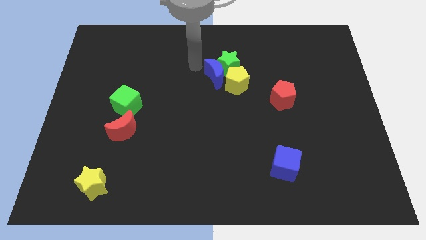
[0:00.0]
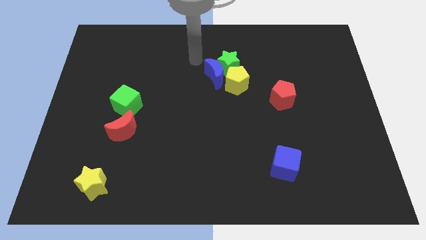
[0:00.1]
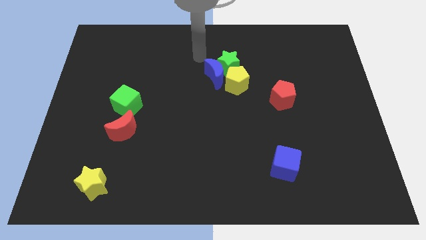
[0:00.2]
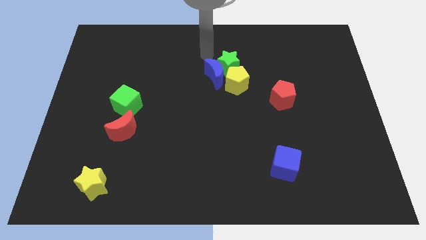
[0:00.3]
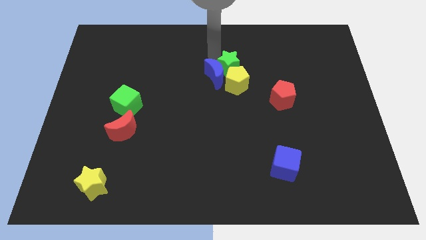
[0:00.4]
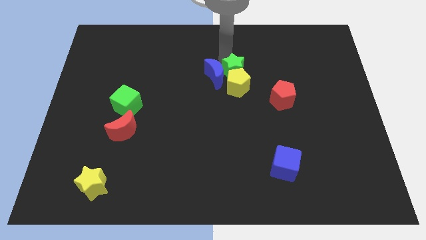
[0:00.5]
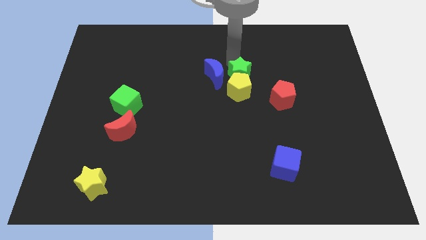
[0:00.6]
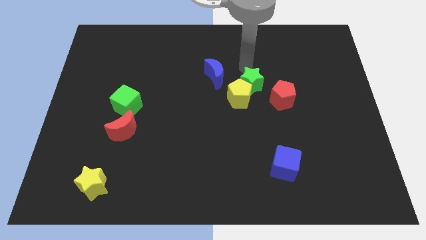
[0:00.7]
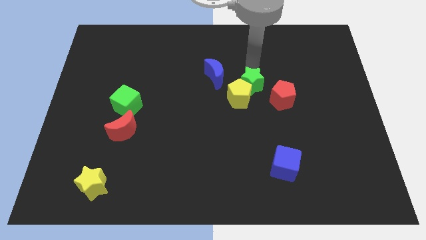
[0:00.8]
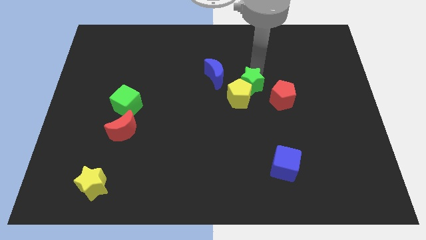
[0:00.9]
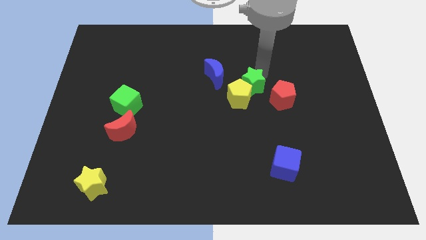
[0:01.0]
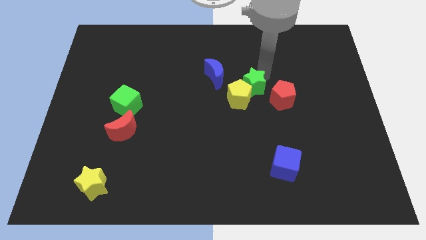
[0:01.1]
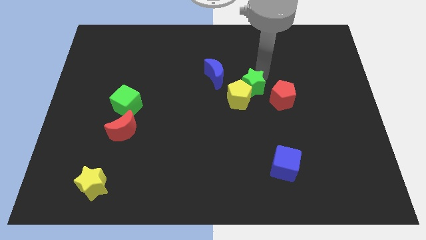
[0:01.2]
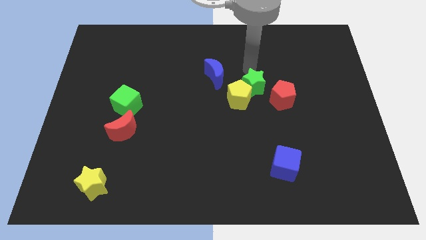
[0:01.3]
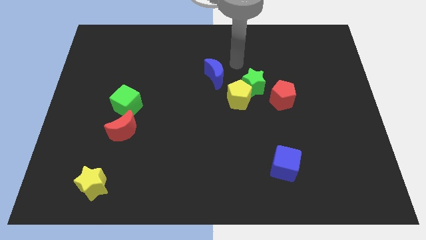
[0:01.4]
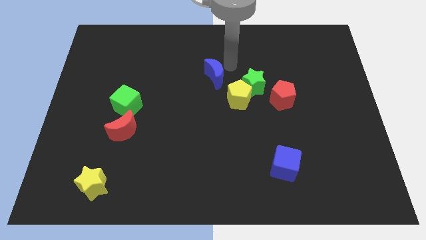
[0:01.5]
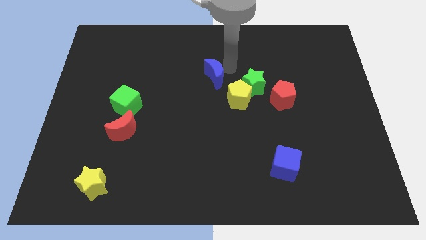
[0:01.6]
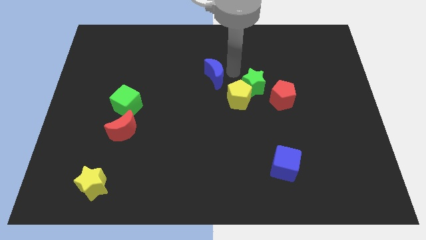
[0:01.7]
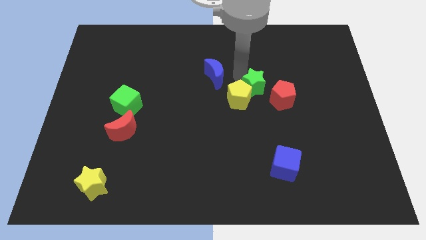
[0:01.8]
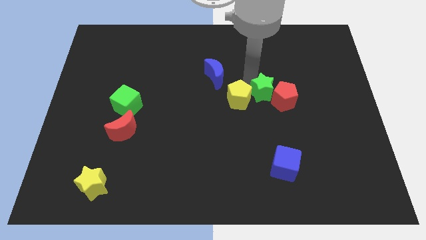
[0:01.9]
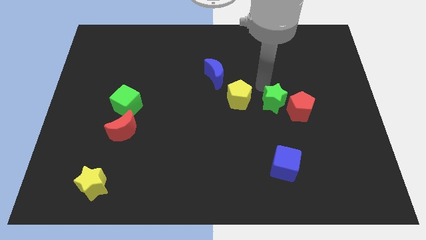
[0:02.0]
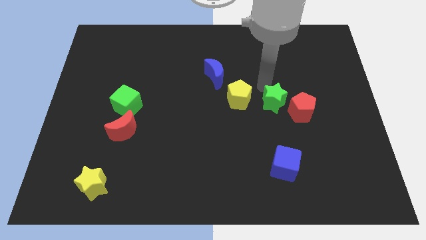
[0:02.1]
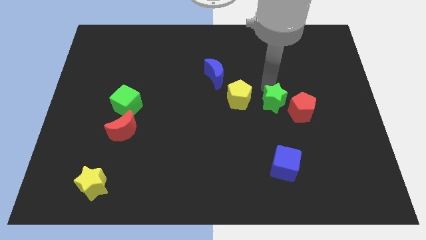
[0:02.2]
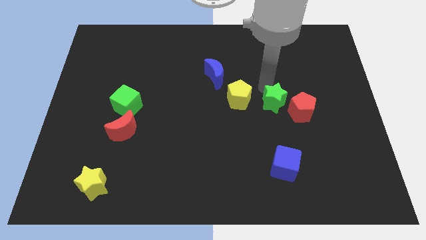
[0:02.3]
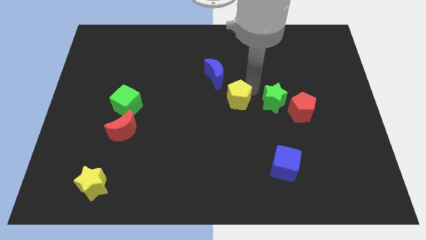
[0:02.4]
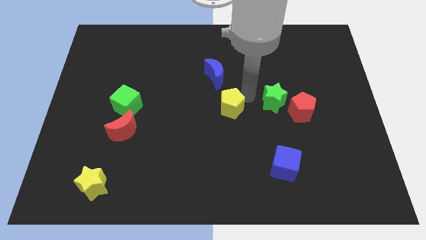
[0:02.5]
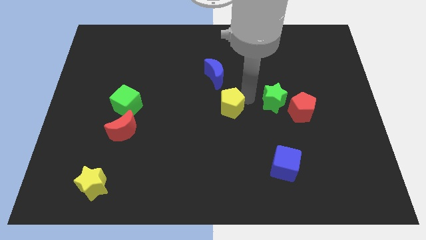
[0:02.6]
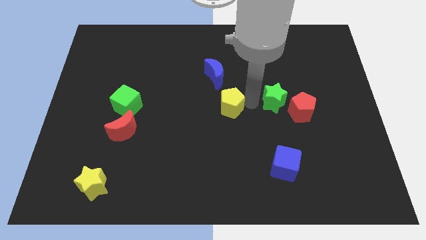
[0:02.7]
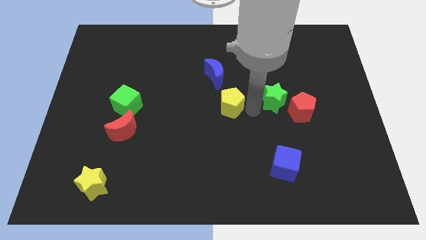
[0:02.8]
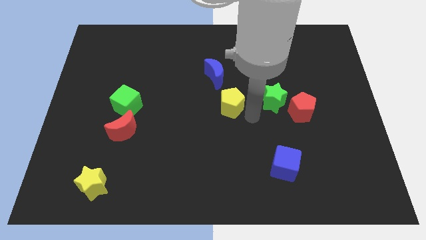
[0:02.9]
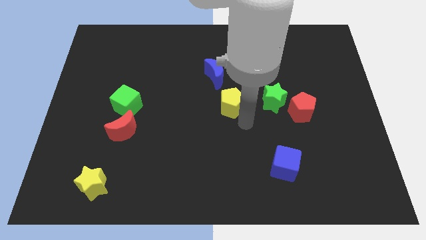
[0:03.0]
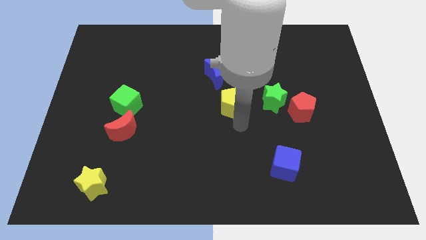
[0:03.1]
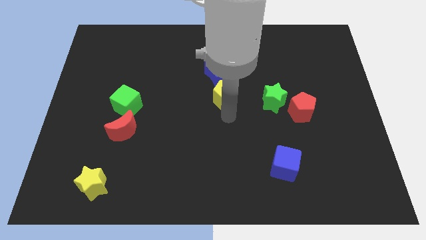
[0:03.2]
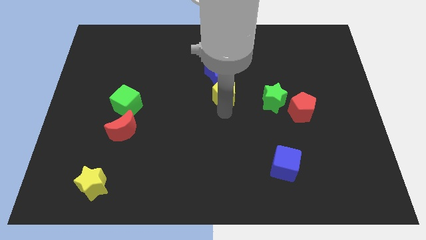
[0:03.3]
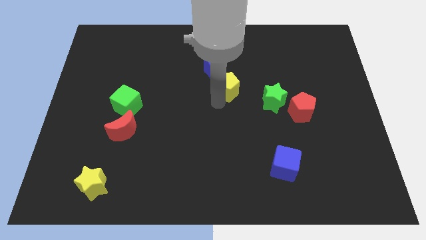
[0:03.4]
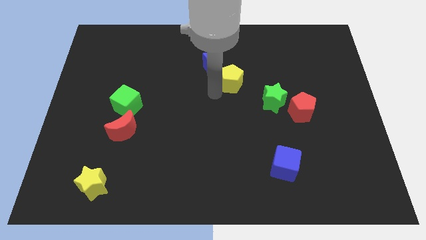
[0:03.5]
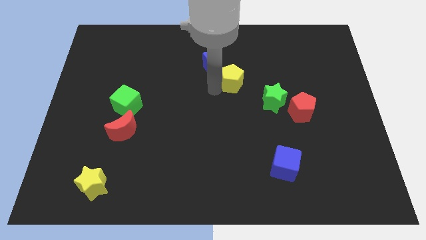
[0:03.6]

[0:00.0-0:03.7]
slightly push the yellow pentagon upwards

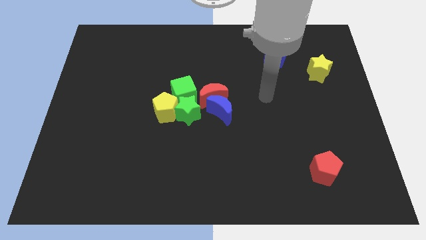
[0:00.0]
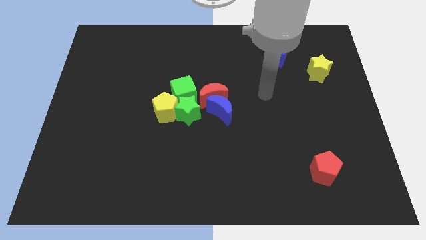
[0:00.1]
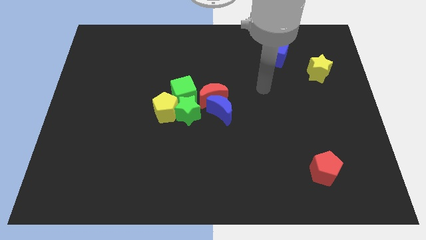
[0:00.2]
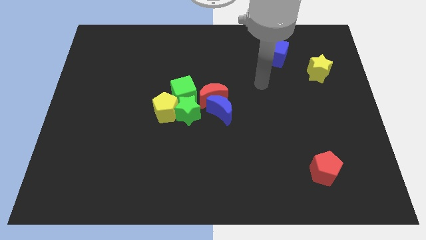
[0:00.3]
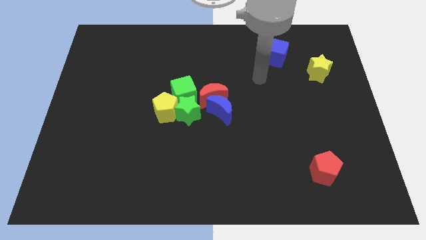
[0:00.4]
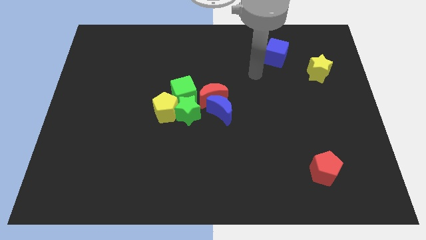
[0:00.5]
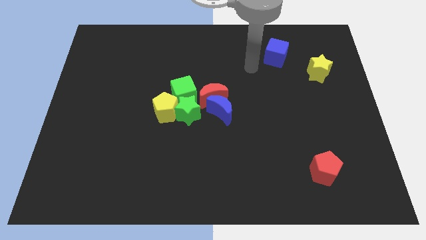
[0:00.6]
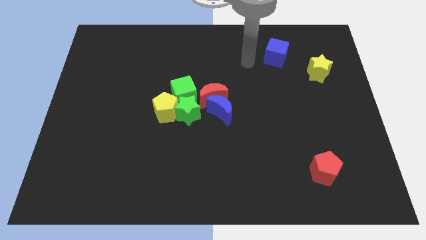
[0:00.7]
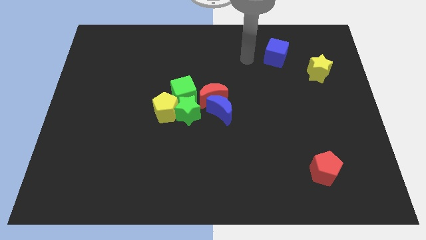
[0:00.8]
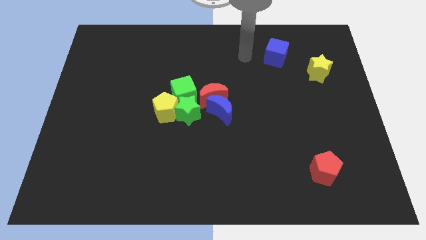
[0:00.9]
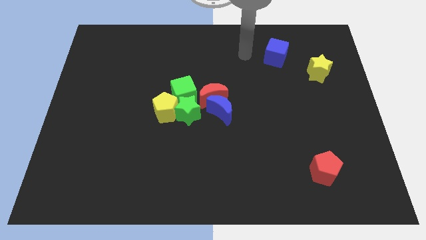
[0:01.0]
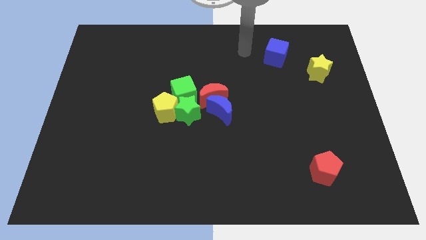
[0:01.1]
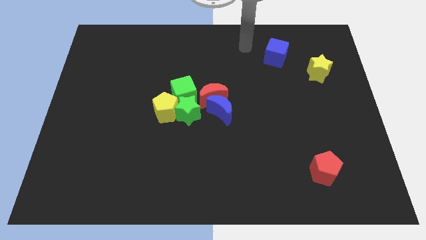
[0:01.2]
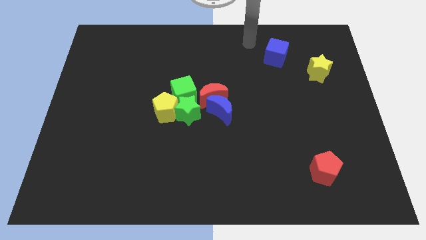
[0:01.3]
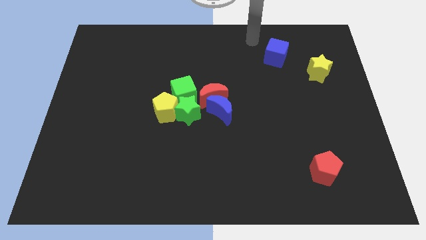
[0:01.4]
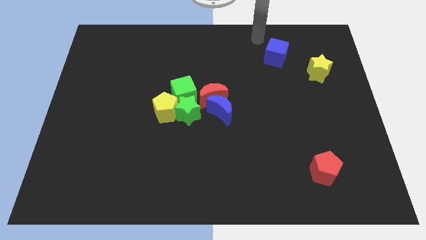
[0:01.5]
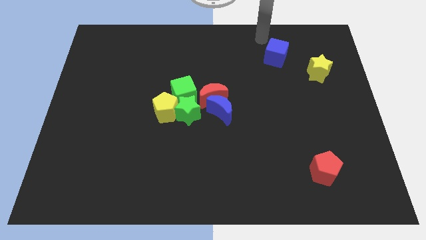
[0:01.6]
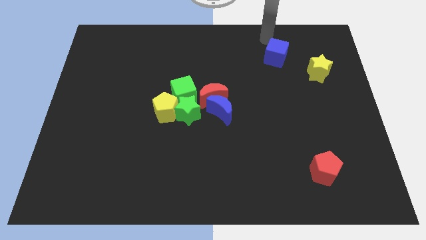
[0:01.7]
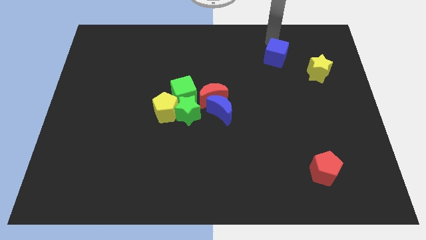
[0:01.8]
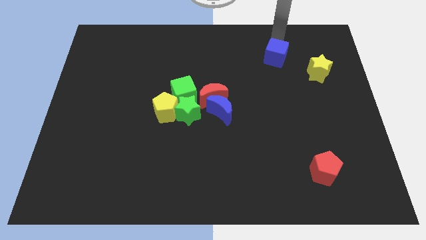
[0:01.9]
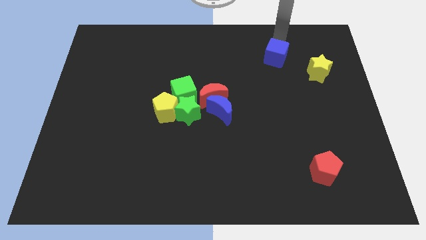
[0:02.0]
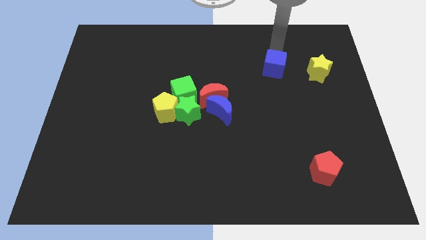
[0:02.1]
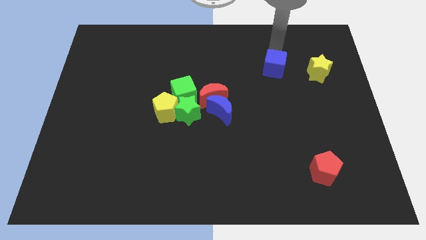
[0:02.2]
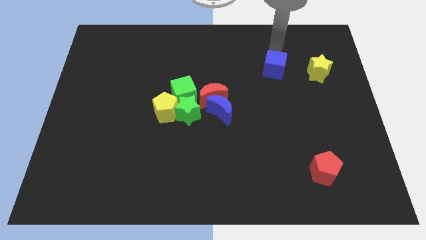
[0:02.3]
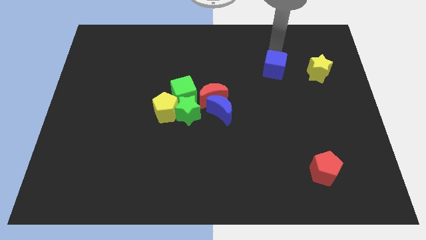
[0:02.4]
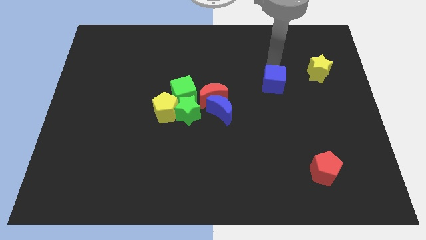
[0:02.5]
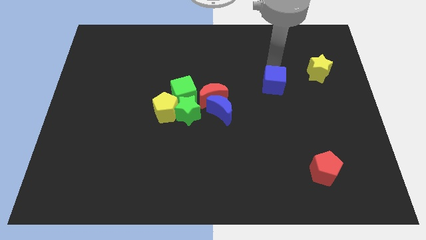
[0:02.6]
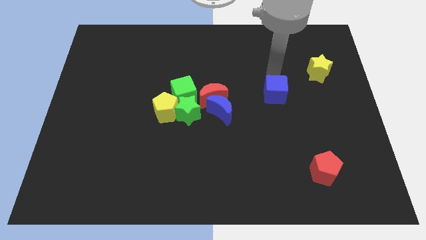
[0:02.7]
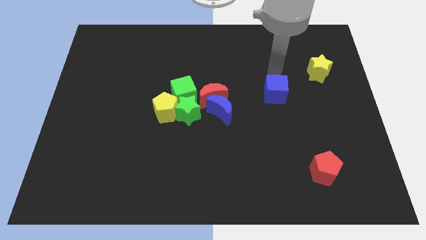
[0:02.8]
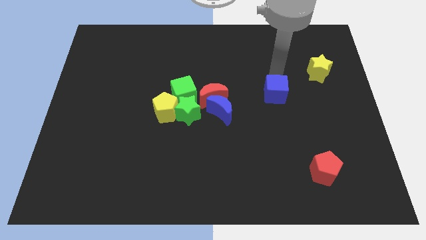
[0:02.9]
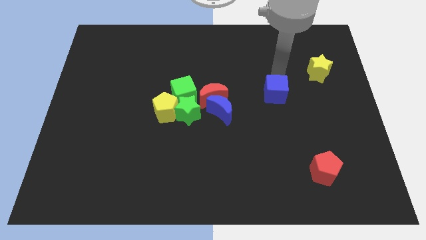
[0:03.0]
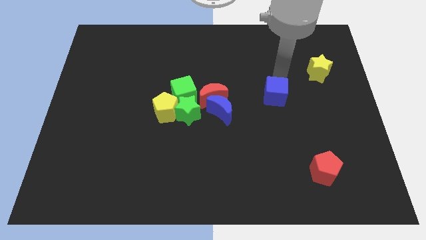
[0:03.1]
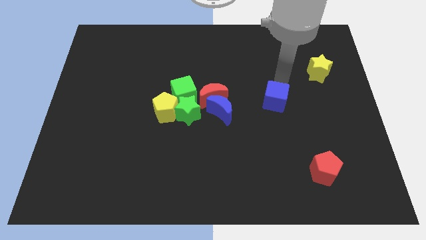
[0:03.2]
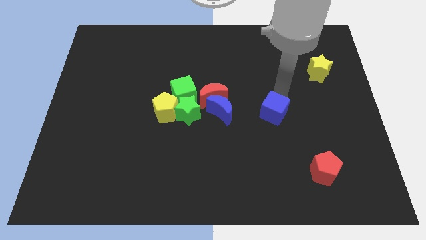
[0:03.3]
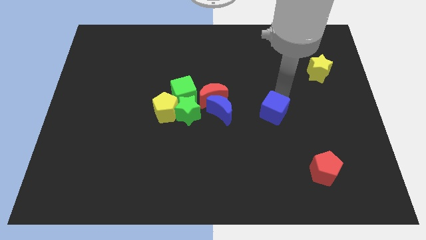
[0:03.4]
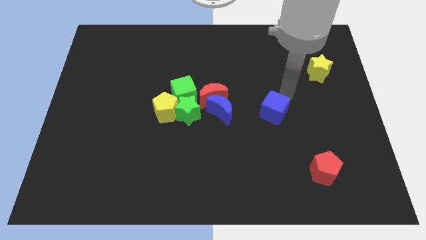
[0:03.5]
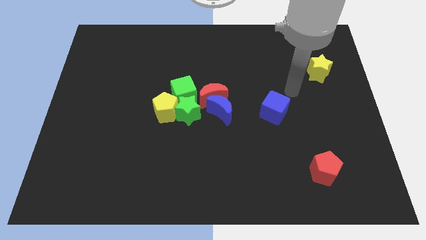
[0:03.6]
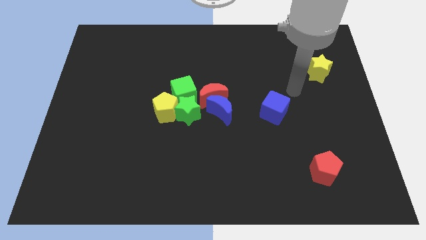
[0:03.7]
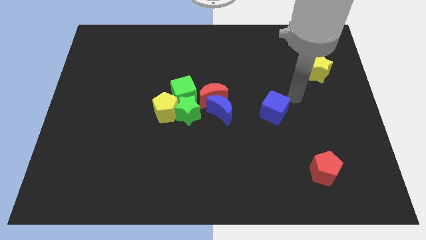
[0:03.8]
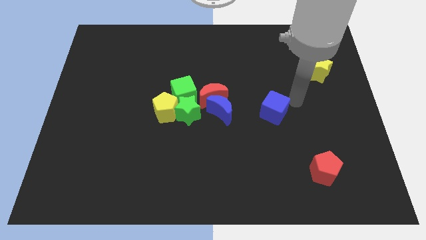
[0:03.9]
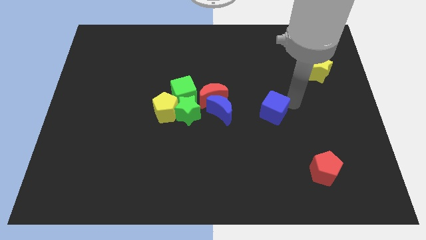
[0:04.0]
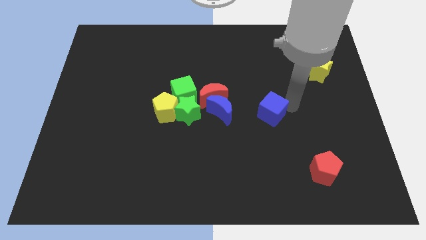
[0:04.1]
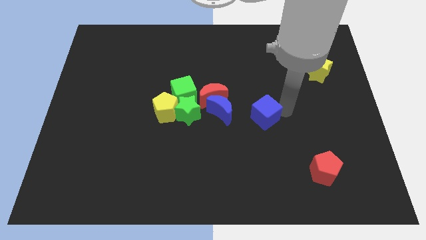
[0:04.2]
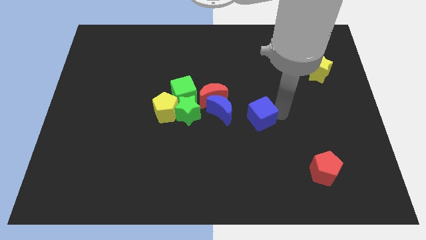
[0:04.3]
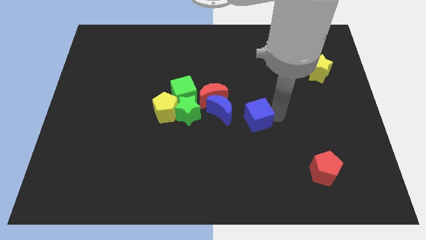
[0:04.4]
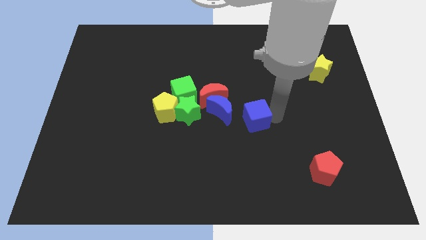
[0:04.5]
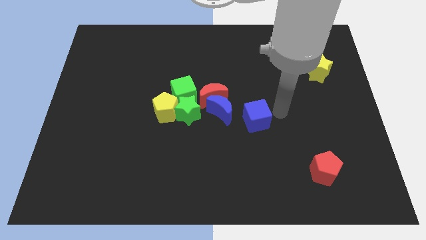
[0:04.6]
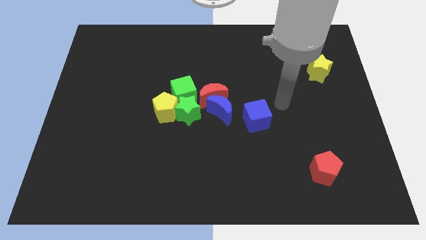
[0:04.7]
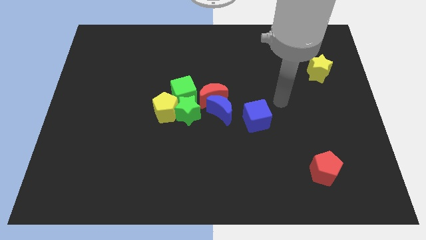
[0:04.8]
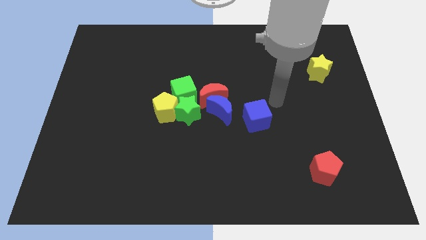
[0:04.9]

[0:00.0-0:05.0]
push the blue cube to the right of the blue crescent
